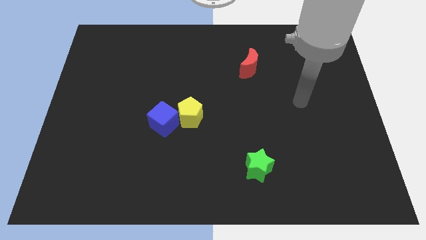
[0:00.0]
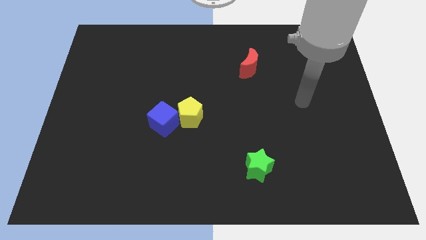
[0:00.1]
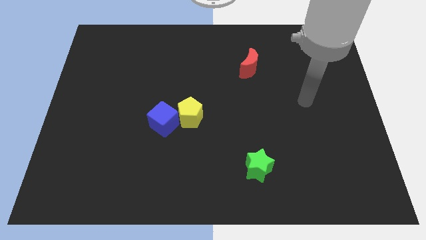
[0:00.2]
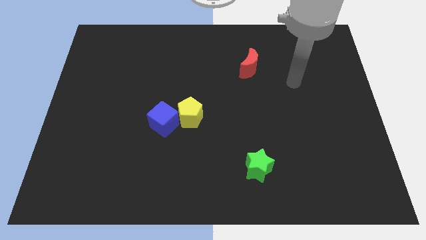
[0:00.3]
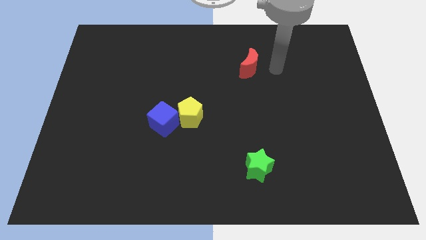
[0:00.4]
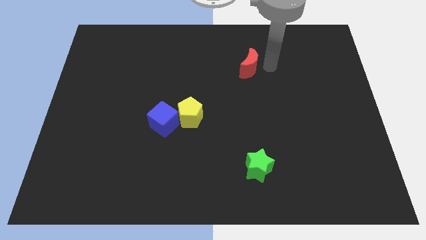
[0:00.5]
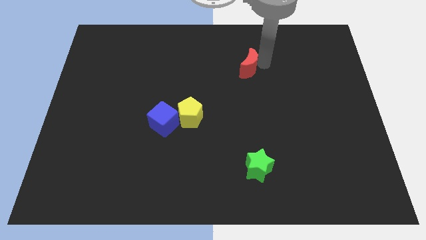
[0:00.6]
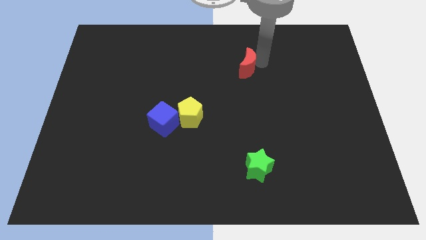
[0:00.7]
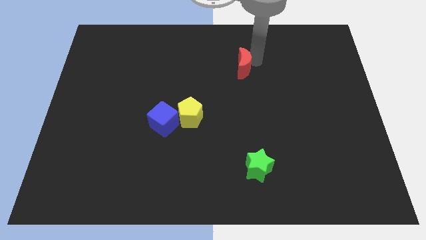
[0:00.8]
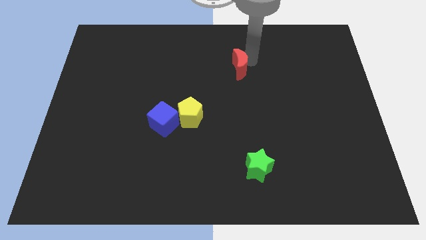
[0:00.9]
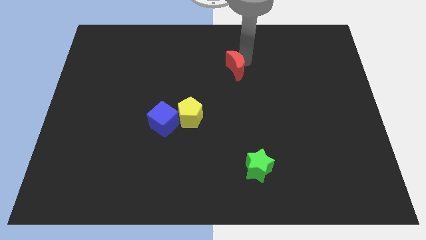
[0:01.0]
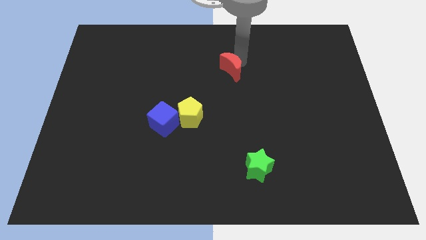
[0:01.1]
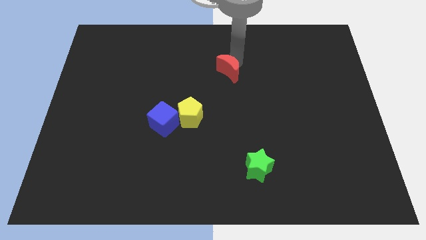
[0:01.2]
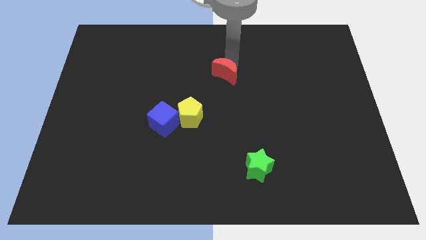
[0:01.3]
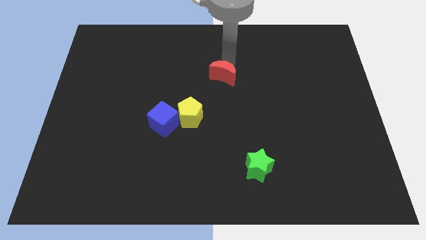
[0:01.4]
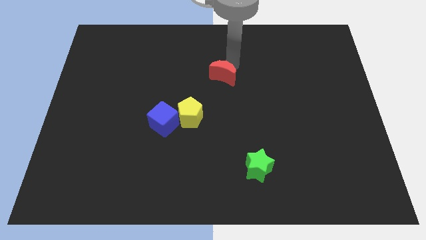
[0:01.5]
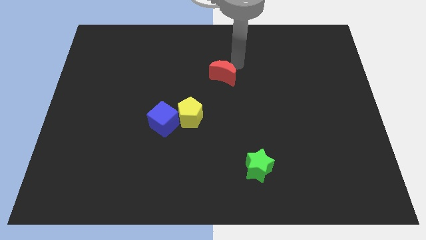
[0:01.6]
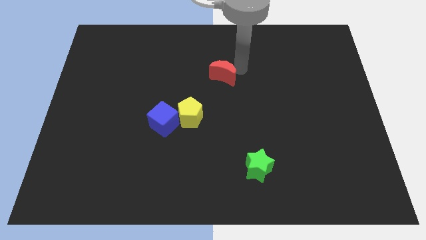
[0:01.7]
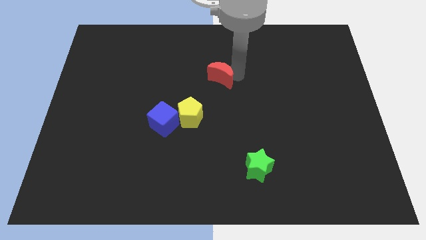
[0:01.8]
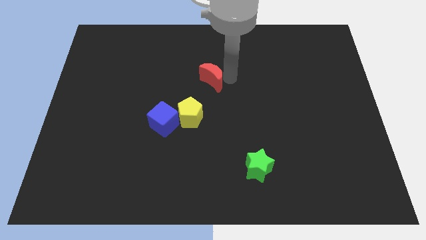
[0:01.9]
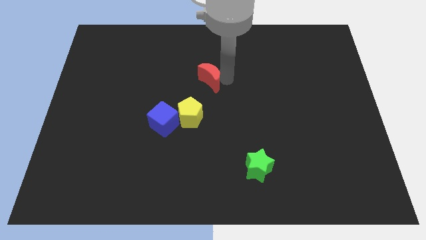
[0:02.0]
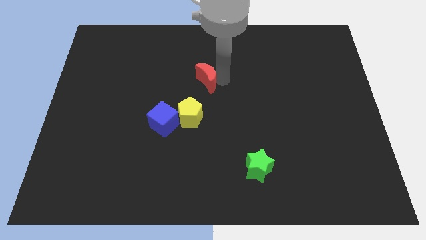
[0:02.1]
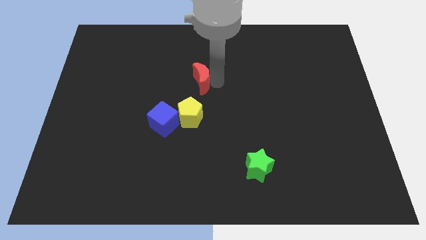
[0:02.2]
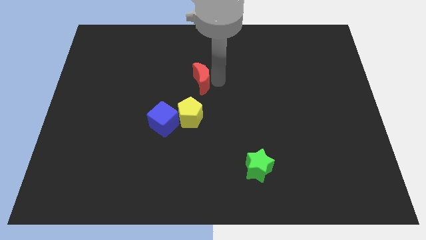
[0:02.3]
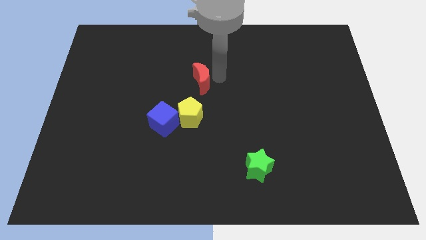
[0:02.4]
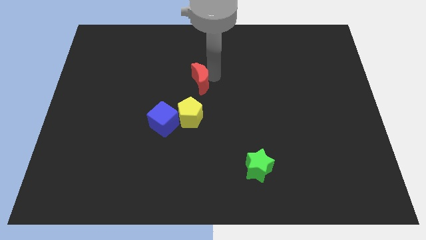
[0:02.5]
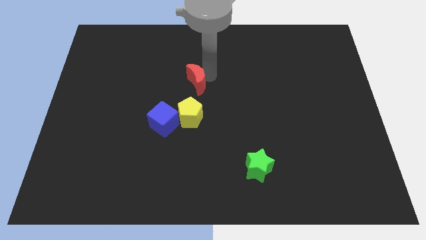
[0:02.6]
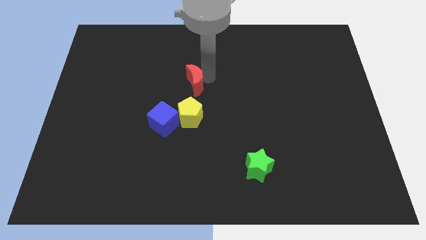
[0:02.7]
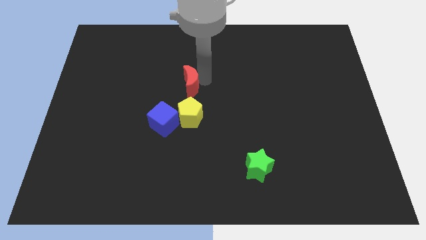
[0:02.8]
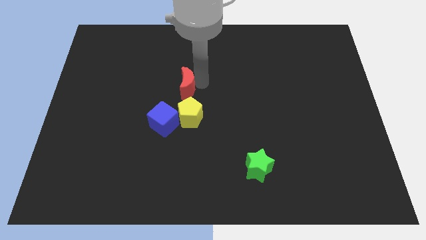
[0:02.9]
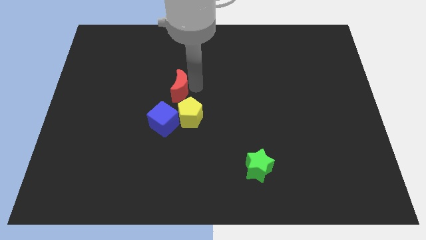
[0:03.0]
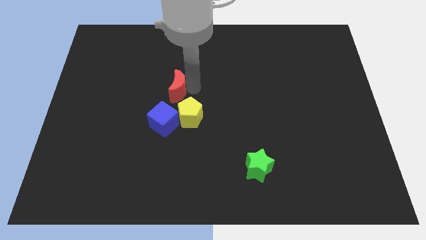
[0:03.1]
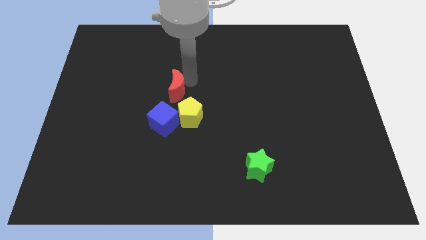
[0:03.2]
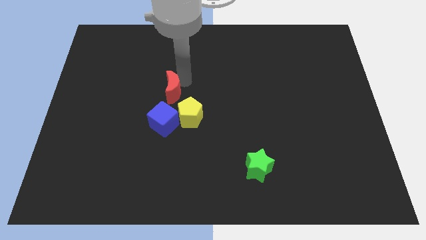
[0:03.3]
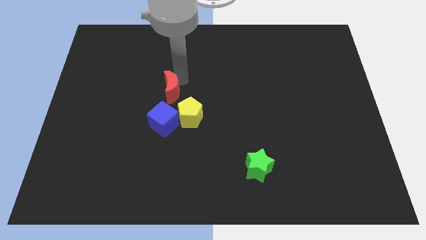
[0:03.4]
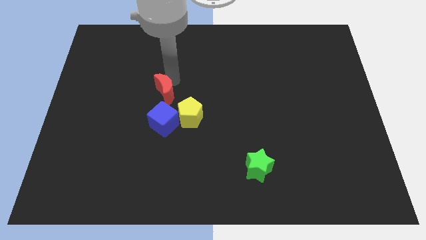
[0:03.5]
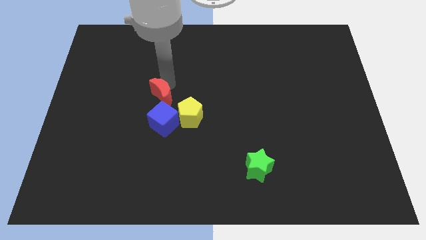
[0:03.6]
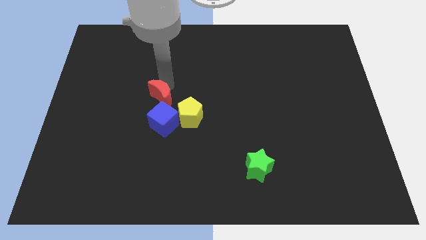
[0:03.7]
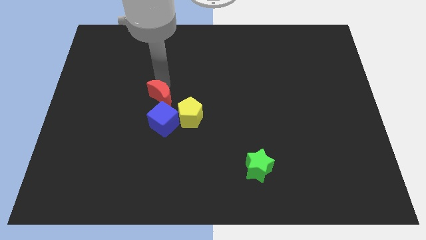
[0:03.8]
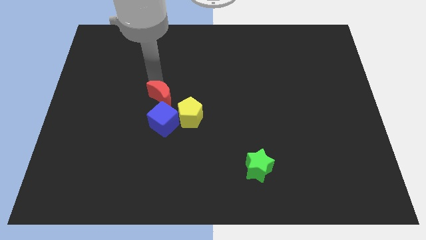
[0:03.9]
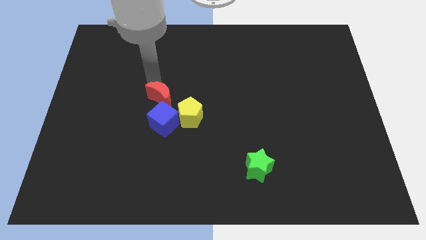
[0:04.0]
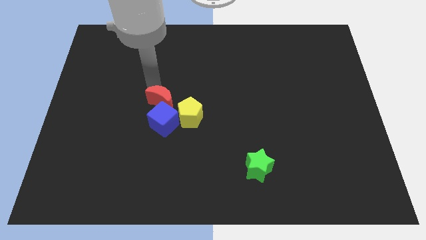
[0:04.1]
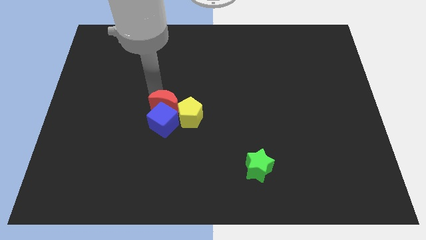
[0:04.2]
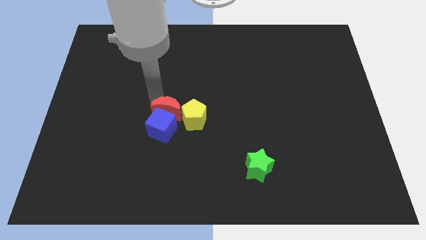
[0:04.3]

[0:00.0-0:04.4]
put the red block close to the blue block

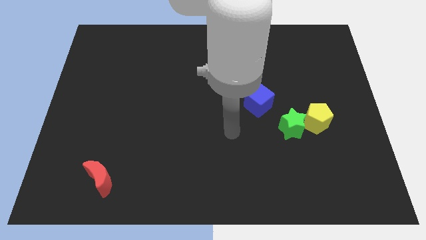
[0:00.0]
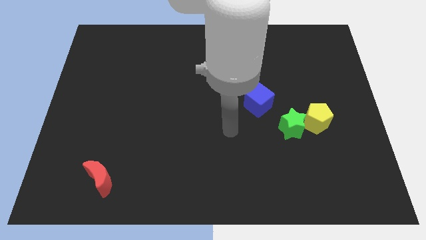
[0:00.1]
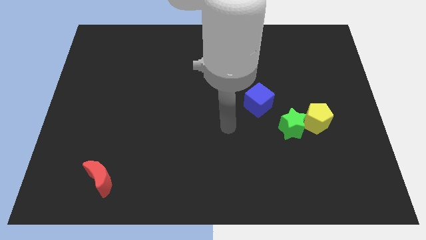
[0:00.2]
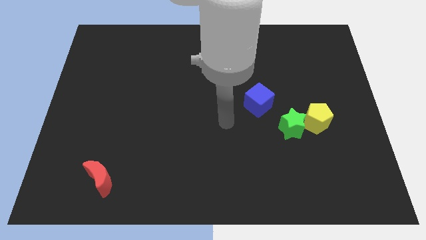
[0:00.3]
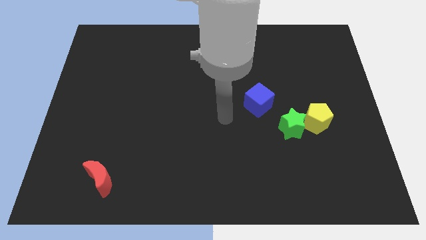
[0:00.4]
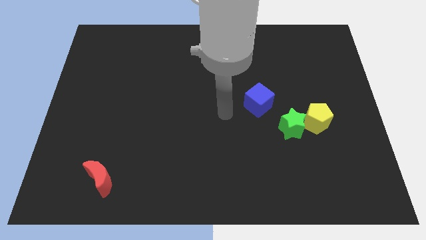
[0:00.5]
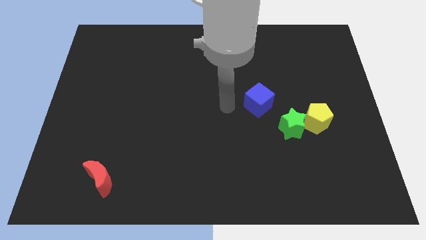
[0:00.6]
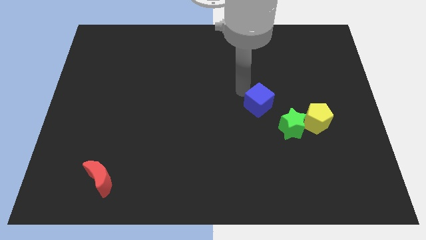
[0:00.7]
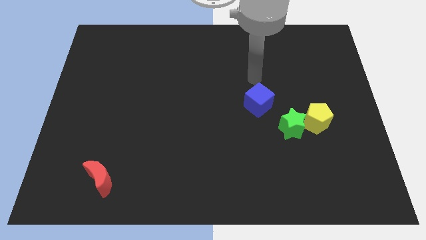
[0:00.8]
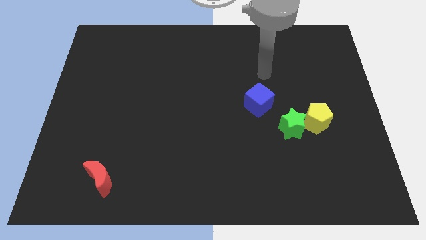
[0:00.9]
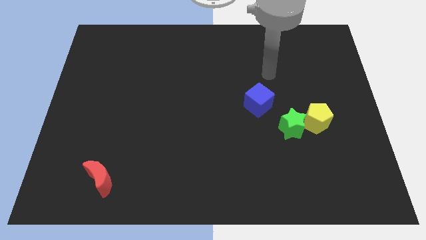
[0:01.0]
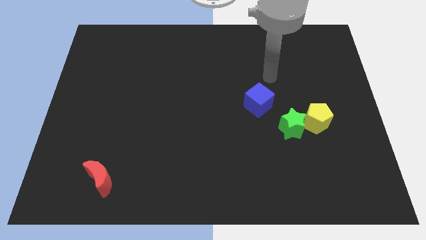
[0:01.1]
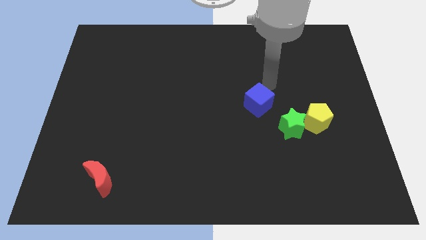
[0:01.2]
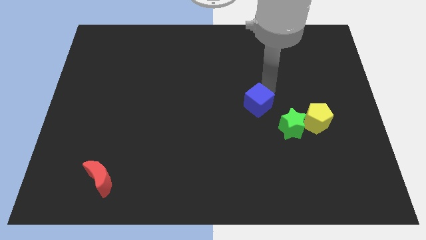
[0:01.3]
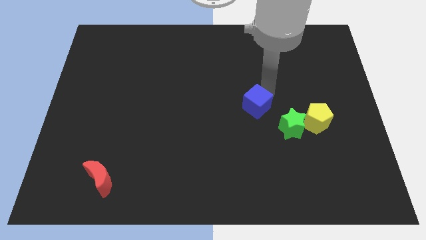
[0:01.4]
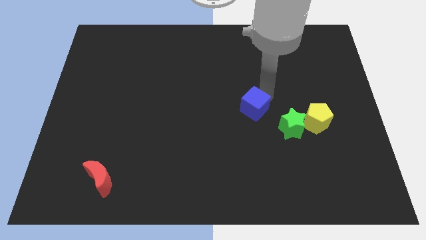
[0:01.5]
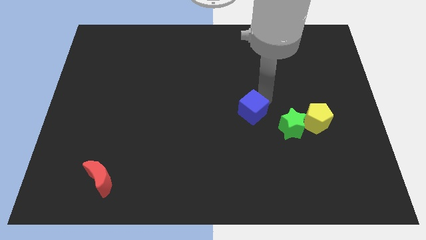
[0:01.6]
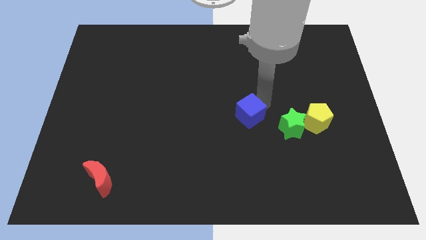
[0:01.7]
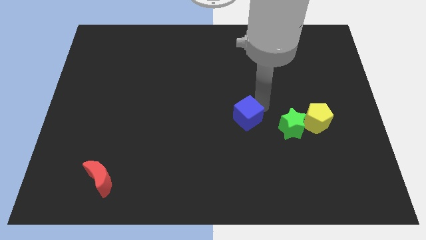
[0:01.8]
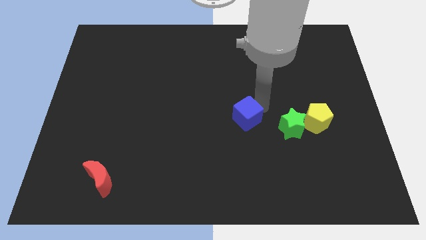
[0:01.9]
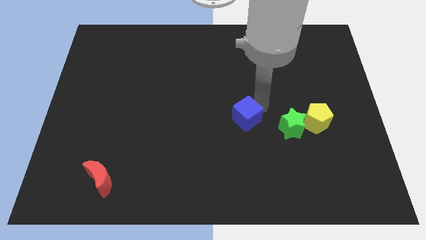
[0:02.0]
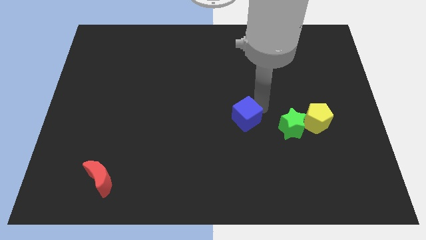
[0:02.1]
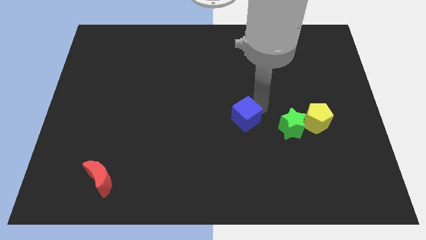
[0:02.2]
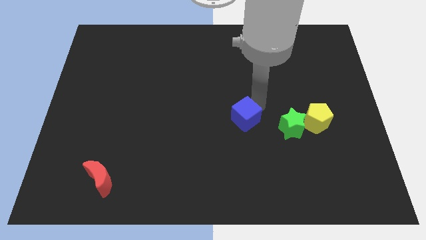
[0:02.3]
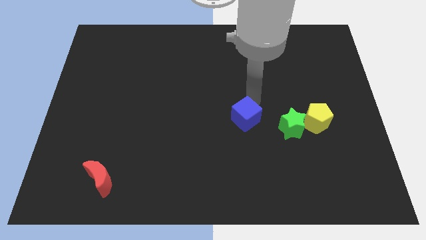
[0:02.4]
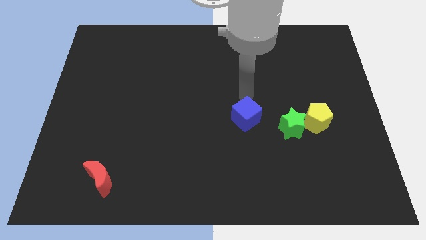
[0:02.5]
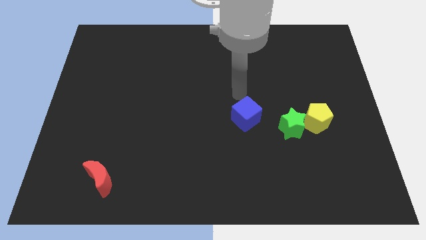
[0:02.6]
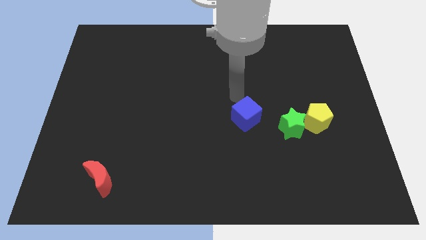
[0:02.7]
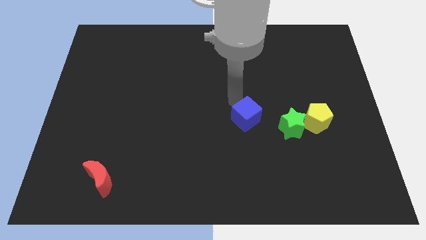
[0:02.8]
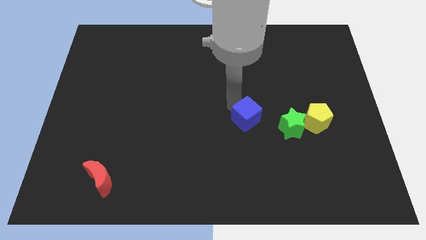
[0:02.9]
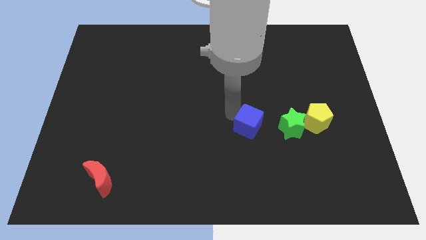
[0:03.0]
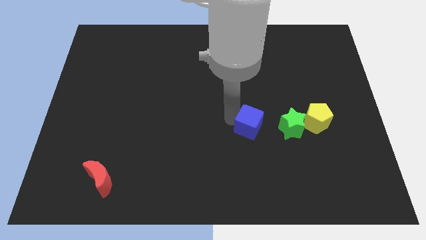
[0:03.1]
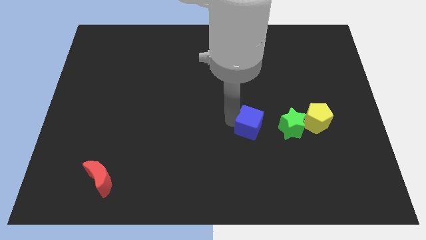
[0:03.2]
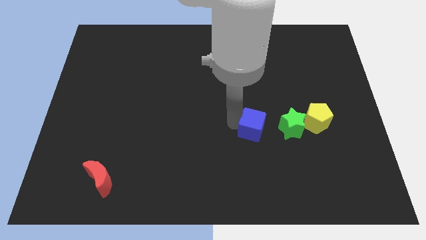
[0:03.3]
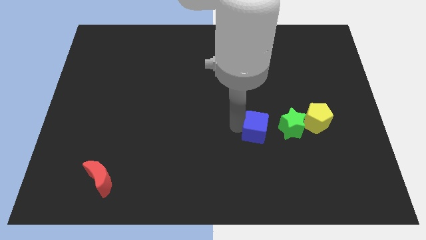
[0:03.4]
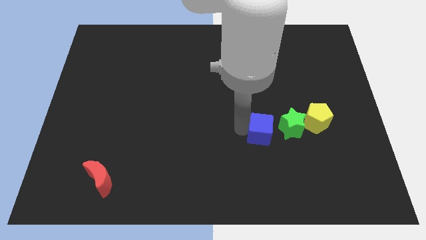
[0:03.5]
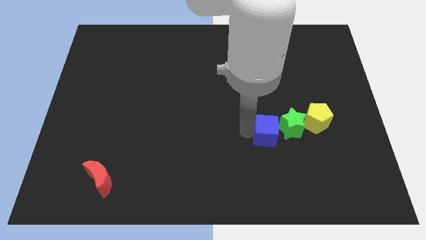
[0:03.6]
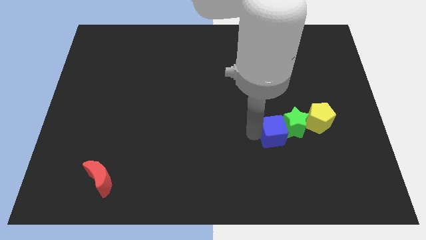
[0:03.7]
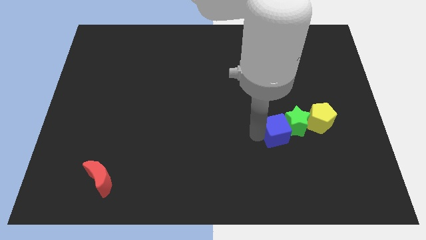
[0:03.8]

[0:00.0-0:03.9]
put the blue block towards the star
